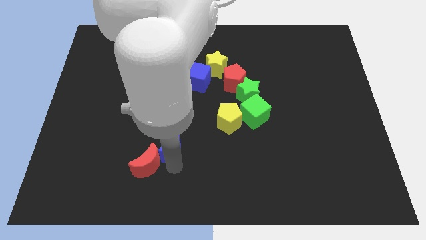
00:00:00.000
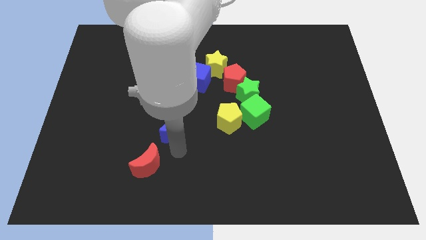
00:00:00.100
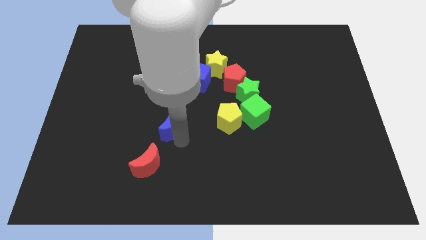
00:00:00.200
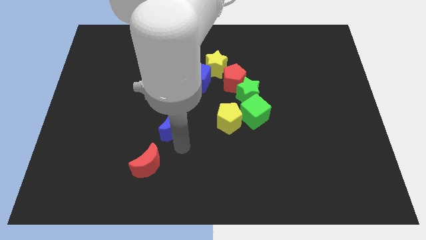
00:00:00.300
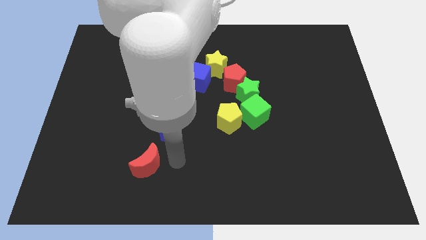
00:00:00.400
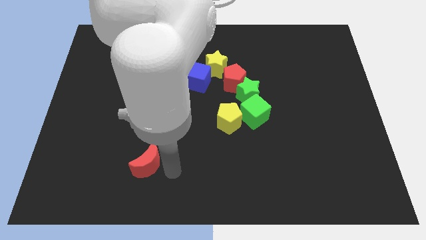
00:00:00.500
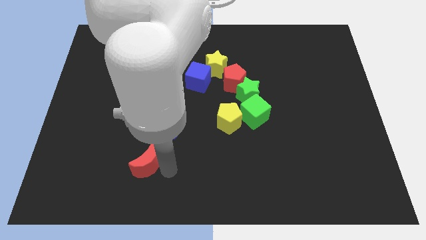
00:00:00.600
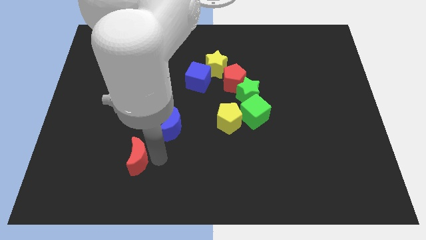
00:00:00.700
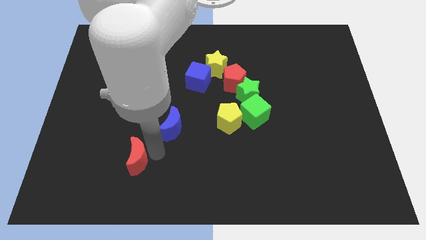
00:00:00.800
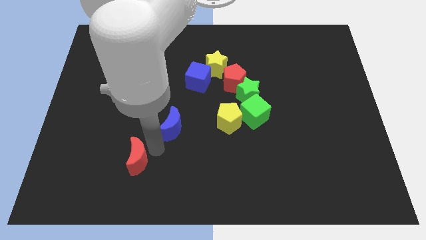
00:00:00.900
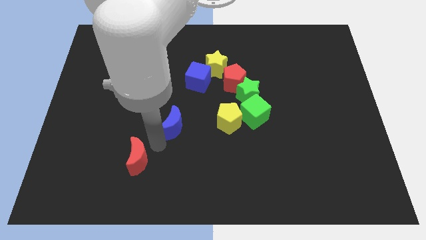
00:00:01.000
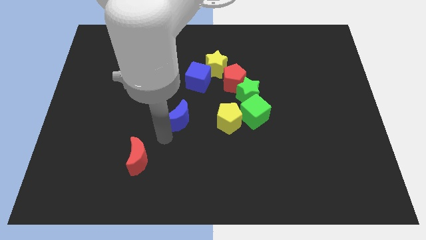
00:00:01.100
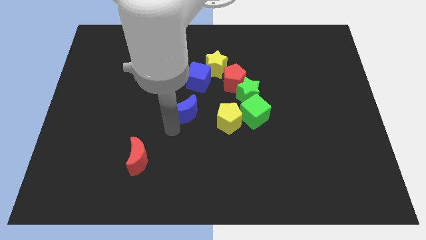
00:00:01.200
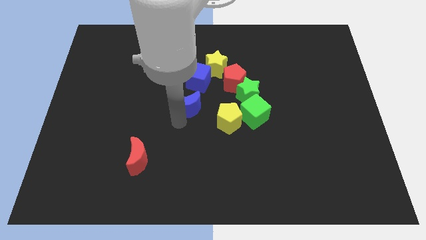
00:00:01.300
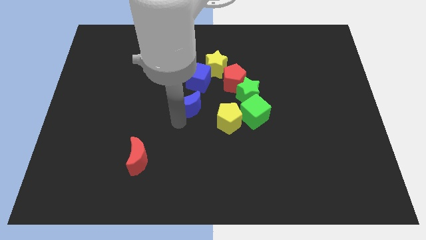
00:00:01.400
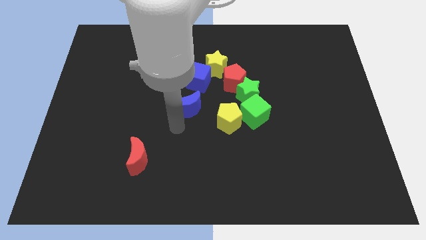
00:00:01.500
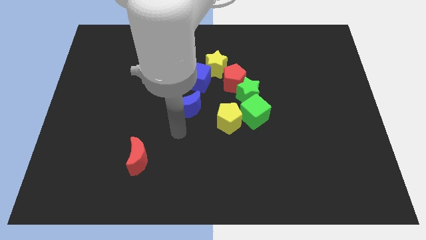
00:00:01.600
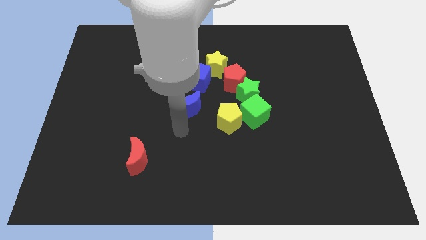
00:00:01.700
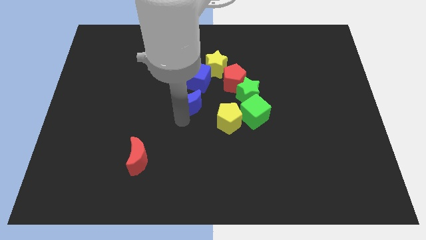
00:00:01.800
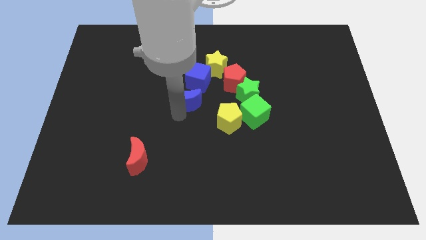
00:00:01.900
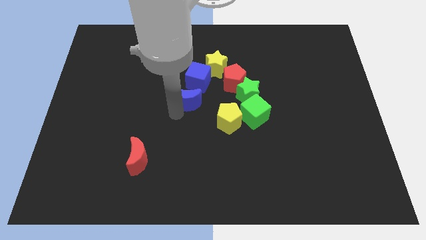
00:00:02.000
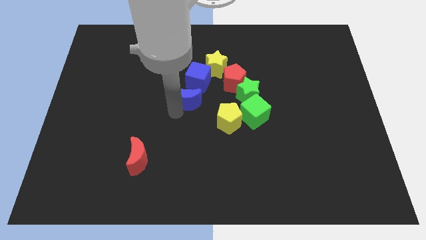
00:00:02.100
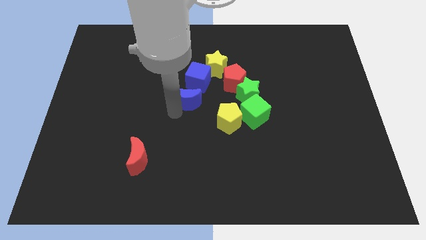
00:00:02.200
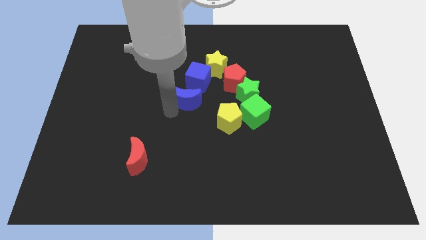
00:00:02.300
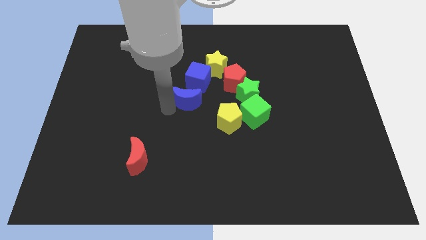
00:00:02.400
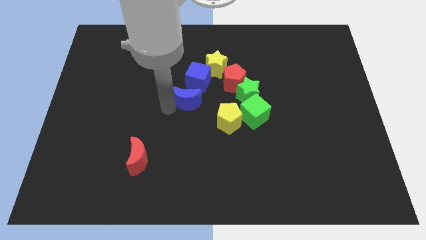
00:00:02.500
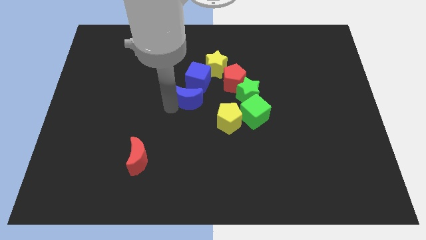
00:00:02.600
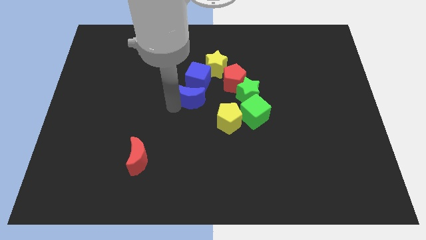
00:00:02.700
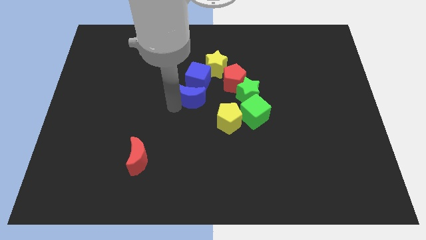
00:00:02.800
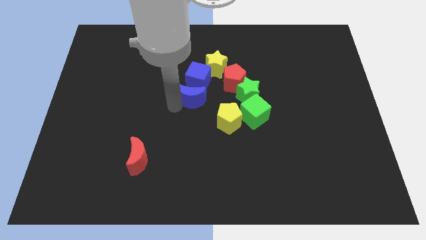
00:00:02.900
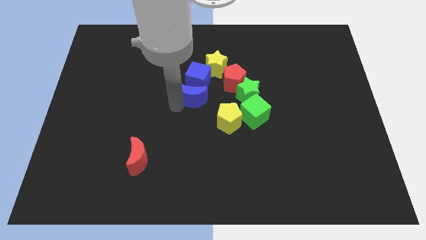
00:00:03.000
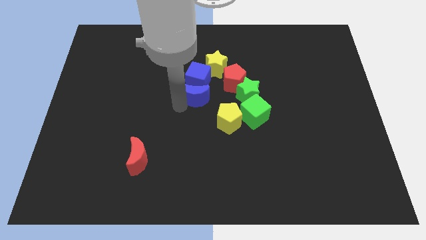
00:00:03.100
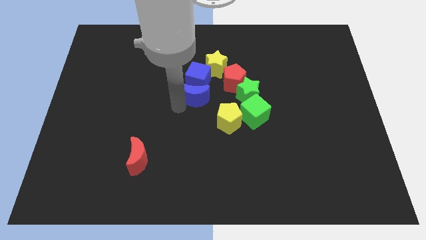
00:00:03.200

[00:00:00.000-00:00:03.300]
place blue moon below blue cube

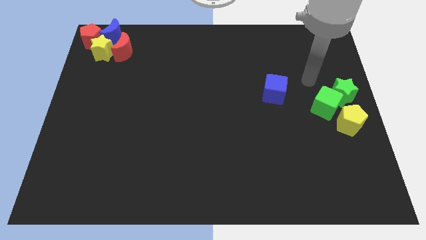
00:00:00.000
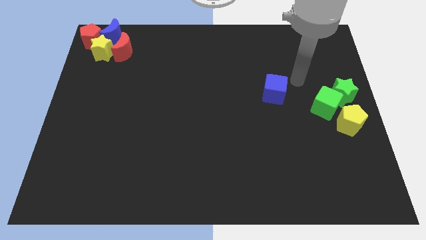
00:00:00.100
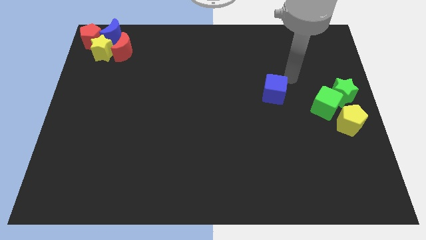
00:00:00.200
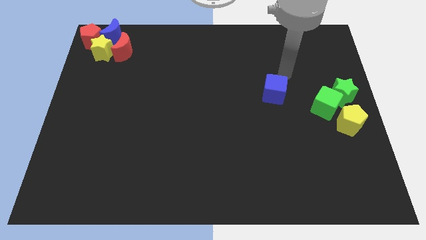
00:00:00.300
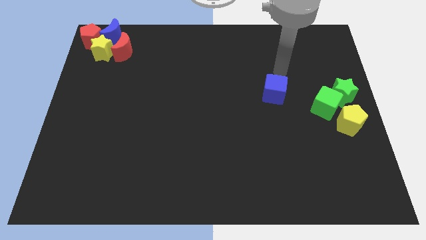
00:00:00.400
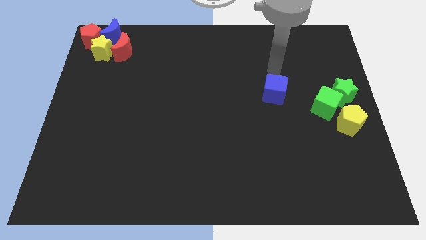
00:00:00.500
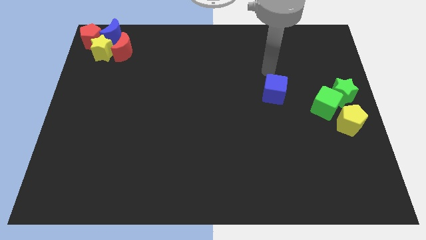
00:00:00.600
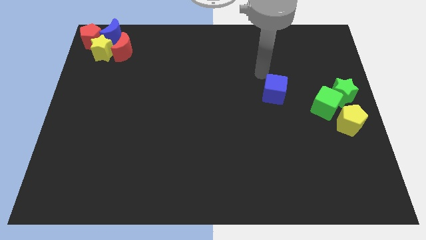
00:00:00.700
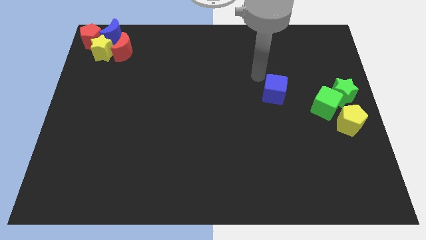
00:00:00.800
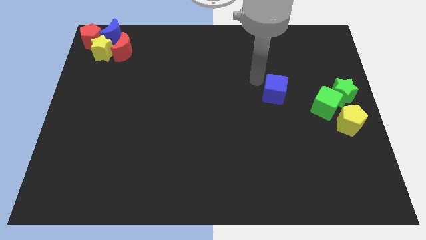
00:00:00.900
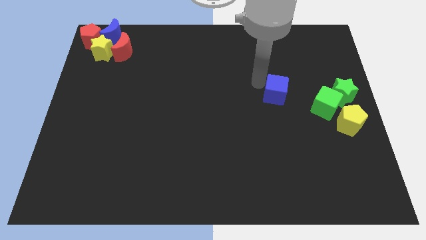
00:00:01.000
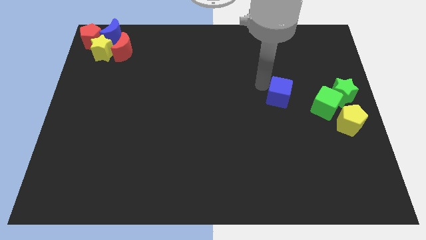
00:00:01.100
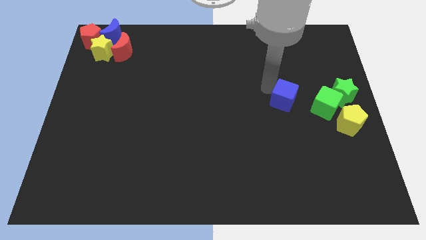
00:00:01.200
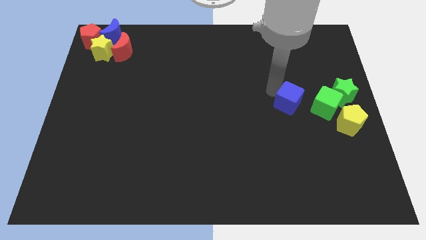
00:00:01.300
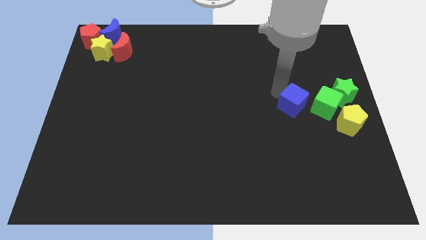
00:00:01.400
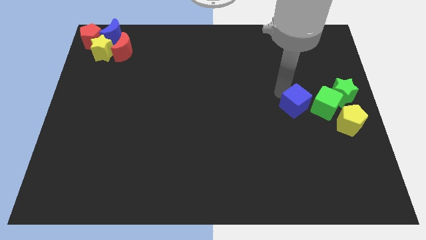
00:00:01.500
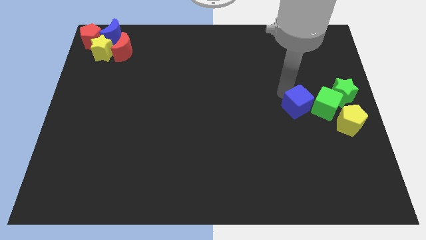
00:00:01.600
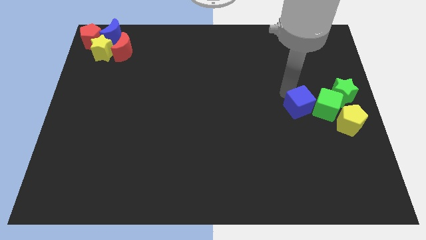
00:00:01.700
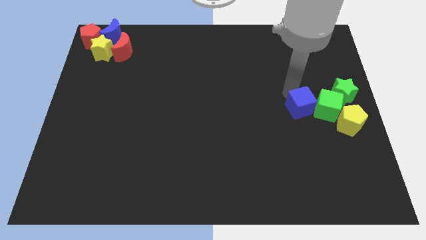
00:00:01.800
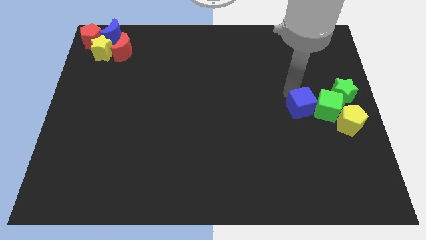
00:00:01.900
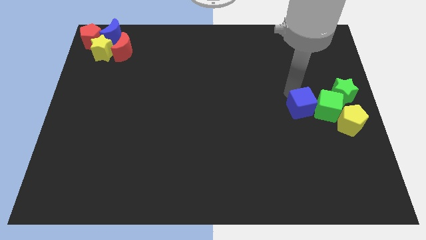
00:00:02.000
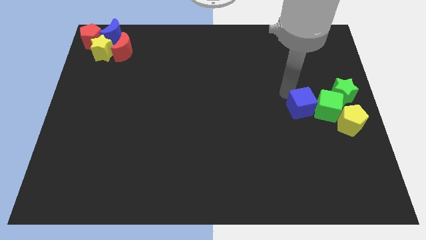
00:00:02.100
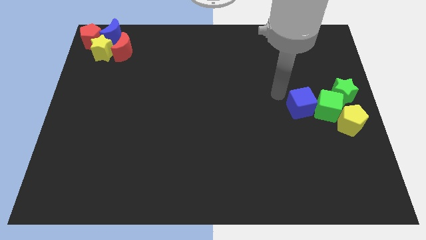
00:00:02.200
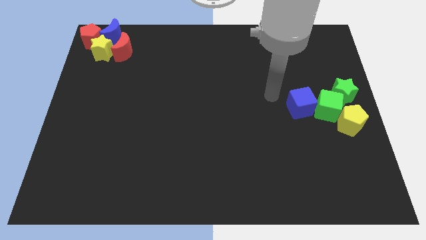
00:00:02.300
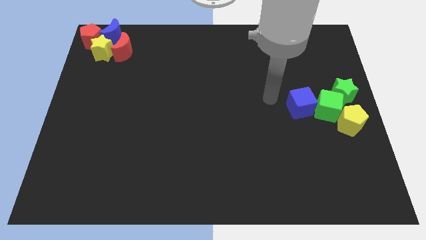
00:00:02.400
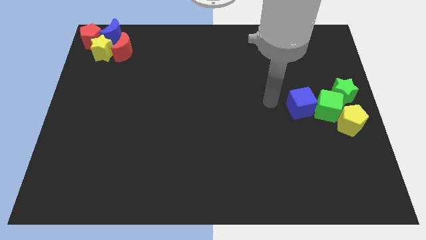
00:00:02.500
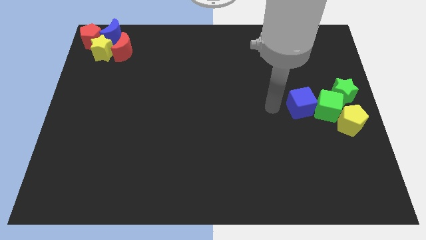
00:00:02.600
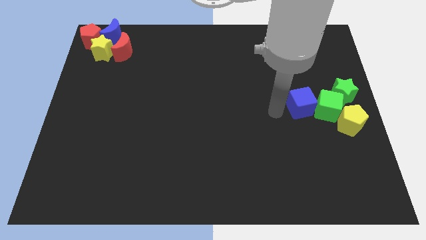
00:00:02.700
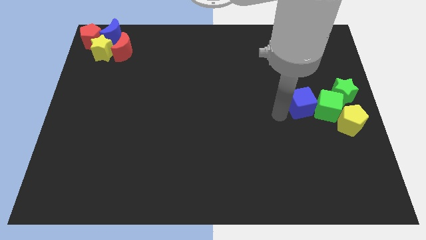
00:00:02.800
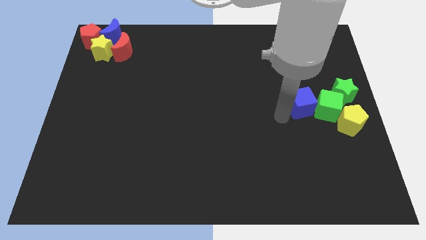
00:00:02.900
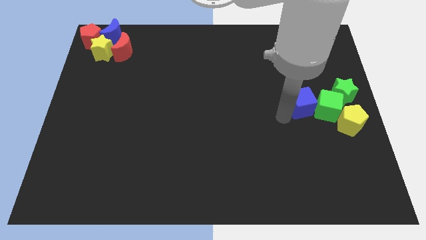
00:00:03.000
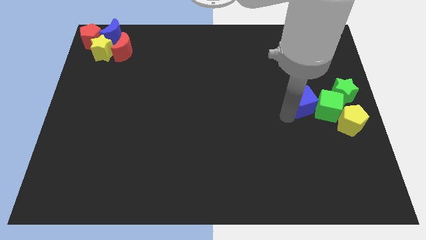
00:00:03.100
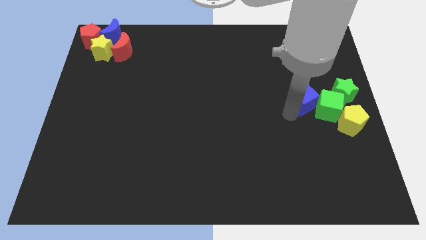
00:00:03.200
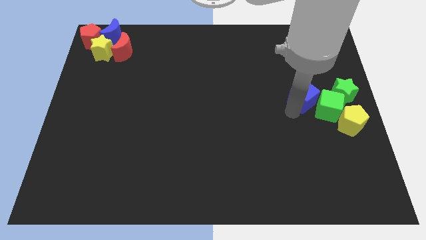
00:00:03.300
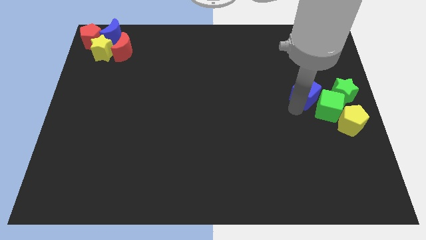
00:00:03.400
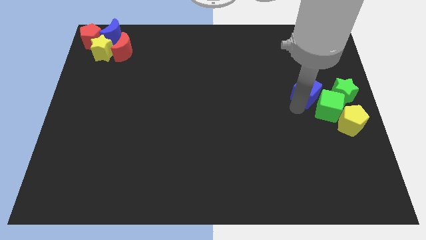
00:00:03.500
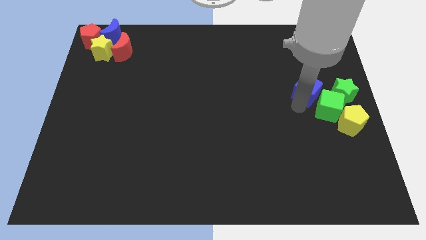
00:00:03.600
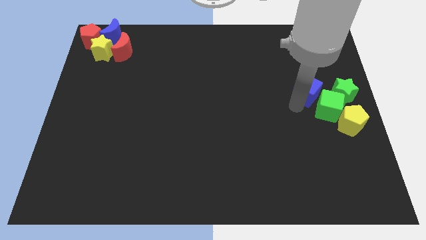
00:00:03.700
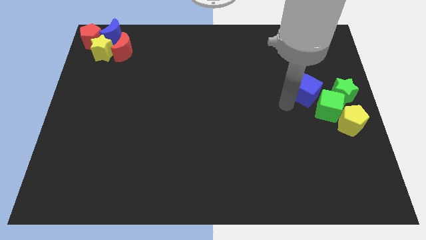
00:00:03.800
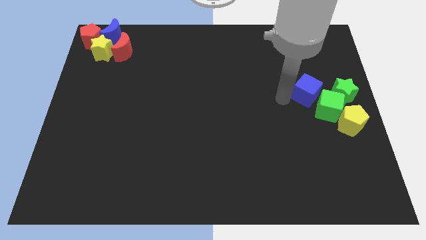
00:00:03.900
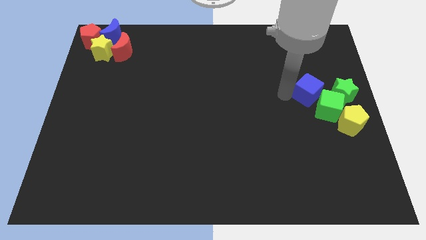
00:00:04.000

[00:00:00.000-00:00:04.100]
move blue cube into the green cube

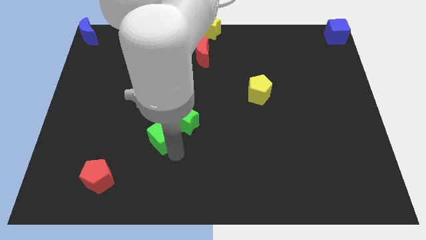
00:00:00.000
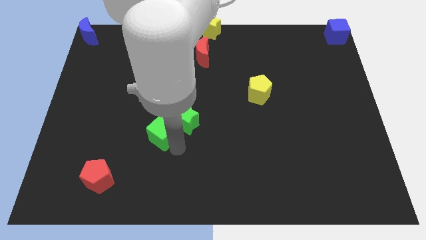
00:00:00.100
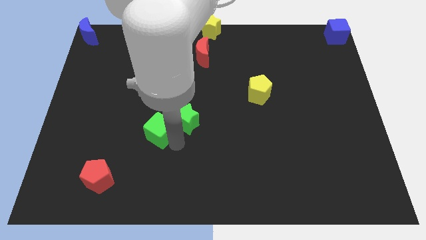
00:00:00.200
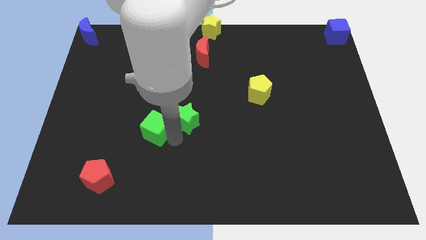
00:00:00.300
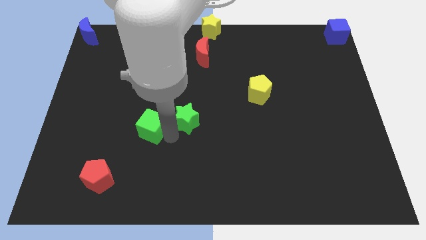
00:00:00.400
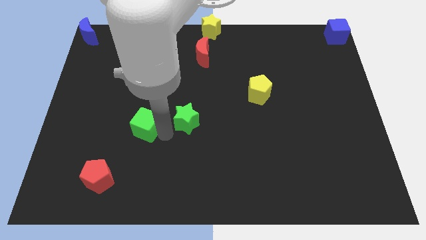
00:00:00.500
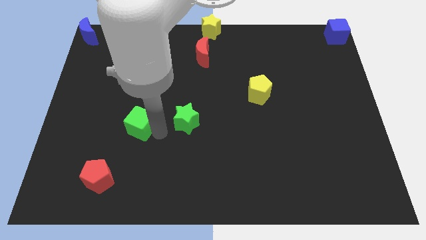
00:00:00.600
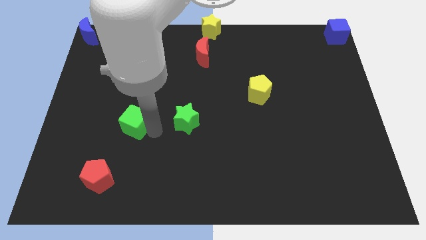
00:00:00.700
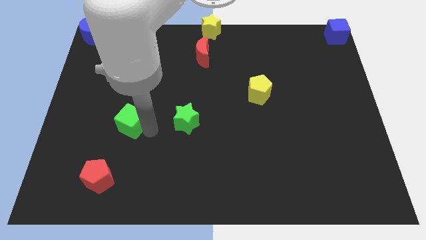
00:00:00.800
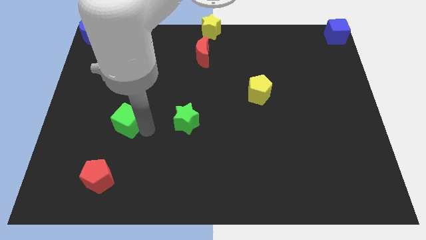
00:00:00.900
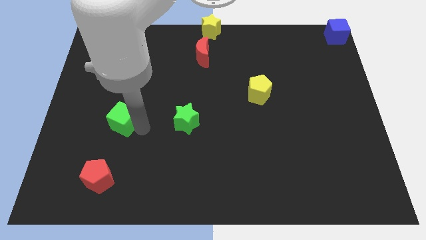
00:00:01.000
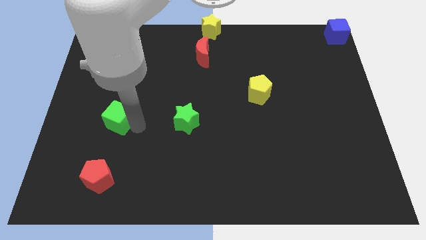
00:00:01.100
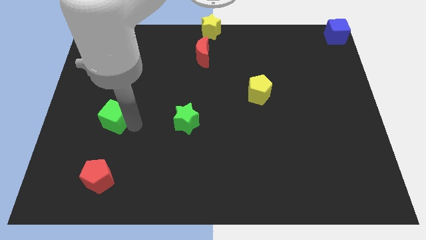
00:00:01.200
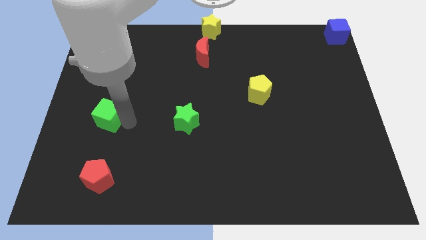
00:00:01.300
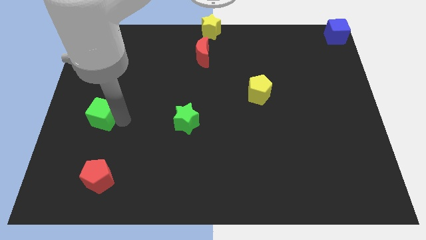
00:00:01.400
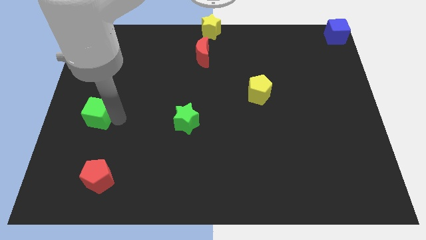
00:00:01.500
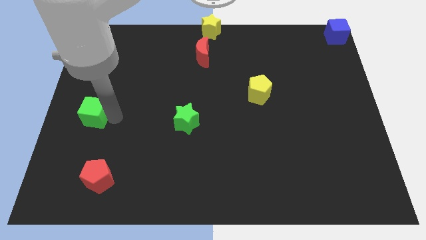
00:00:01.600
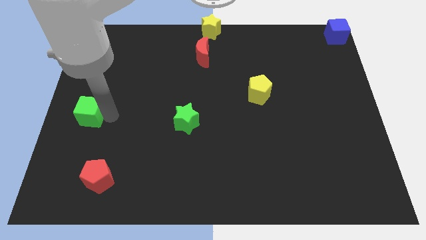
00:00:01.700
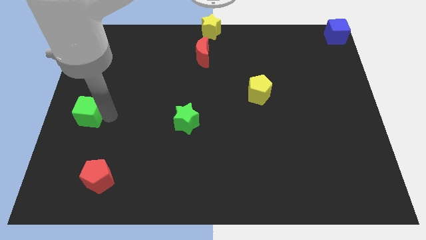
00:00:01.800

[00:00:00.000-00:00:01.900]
place the green cube horizontally to the left side of the green star
